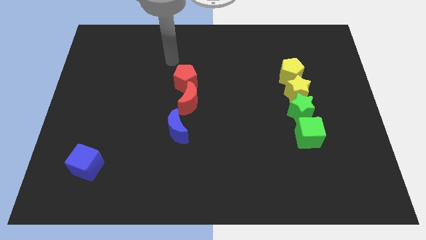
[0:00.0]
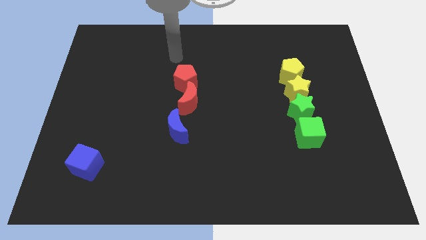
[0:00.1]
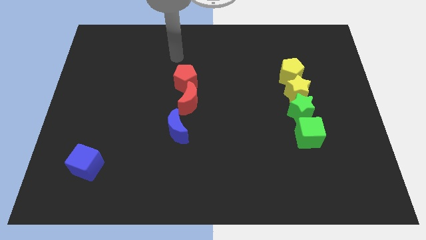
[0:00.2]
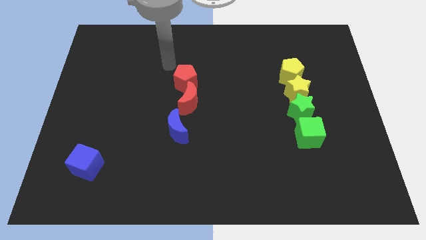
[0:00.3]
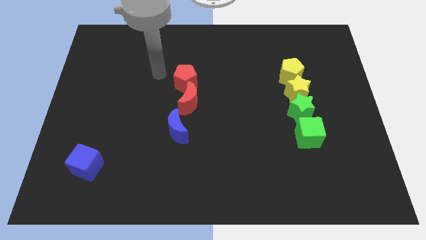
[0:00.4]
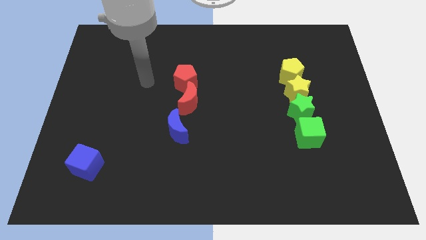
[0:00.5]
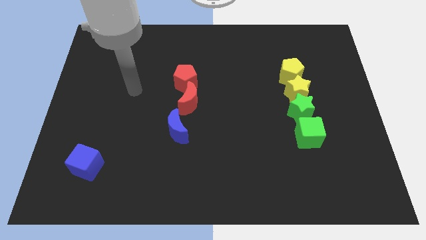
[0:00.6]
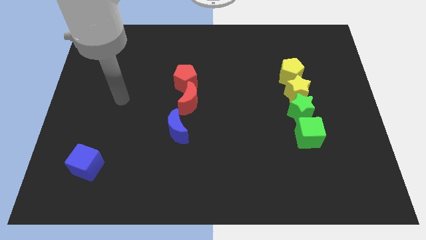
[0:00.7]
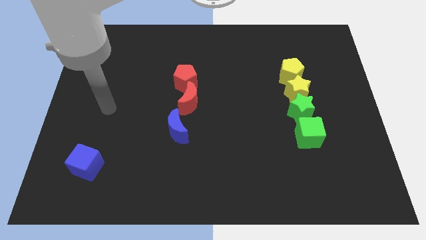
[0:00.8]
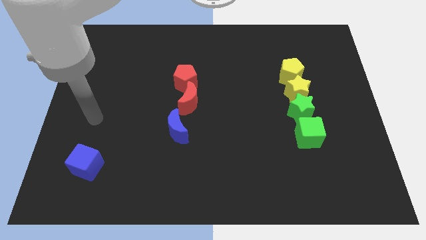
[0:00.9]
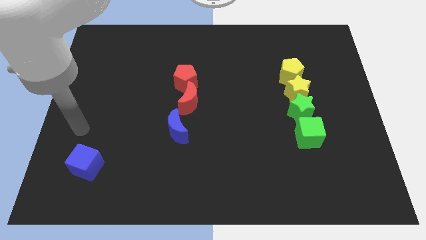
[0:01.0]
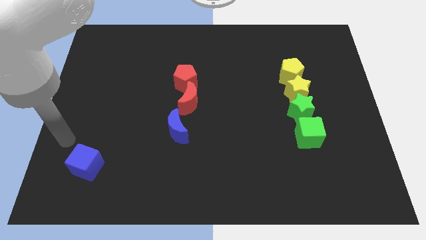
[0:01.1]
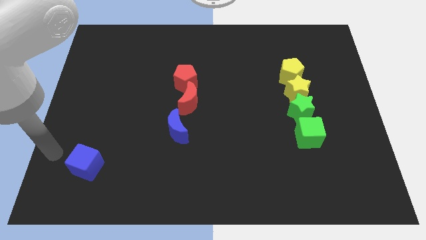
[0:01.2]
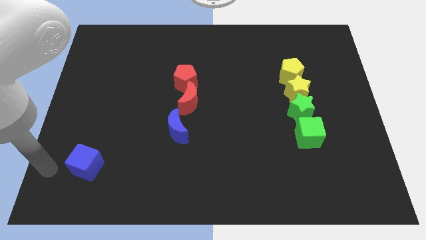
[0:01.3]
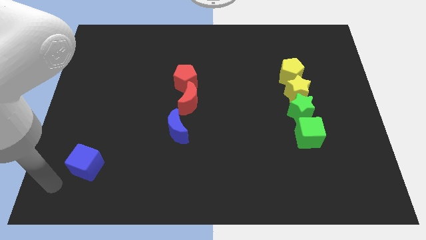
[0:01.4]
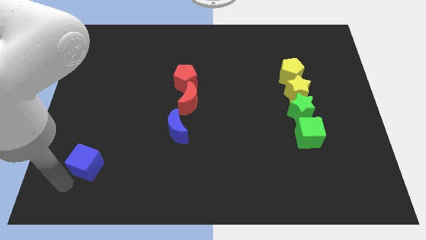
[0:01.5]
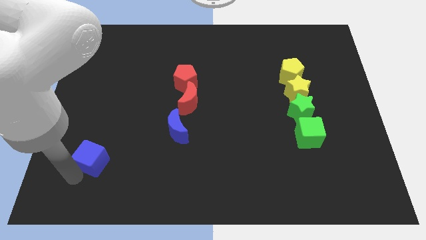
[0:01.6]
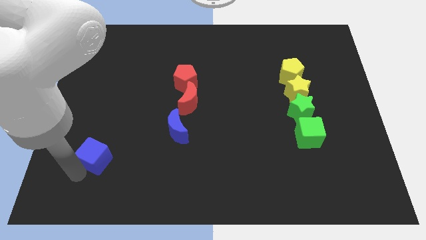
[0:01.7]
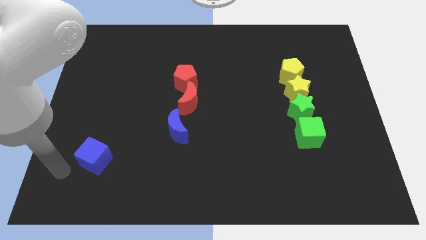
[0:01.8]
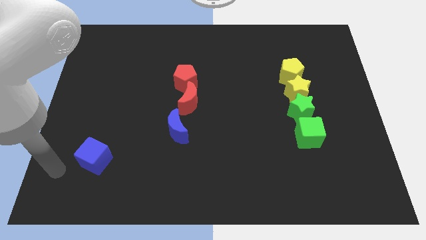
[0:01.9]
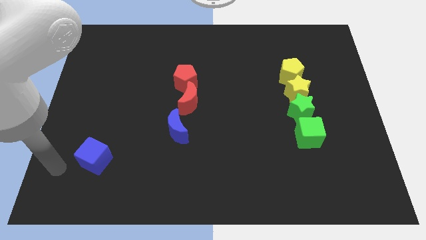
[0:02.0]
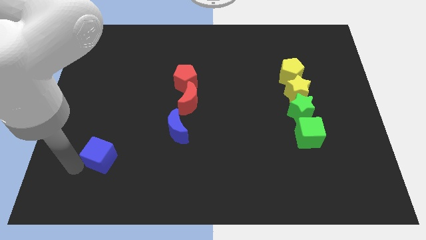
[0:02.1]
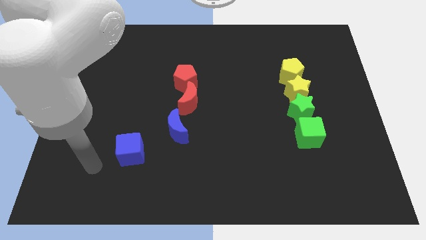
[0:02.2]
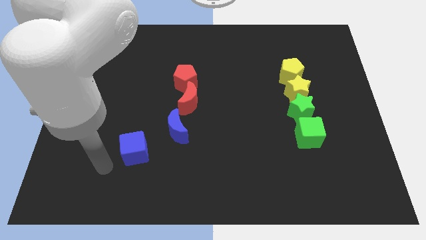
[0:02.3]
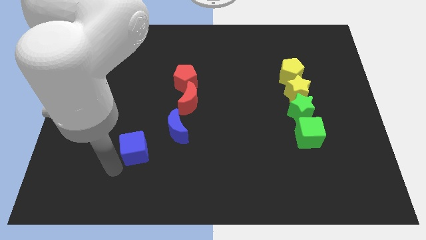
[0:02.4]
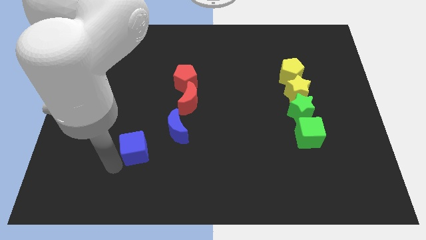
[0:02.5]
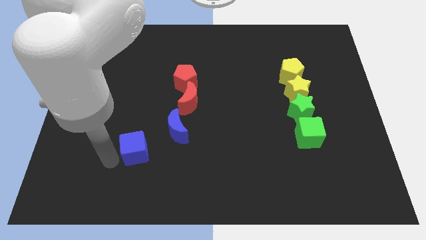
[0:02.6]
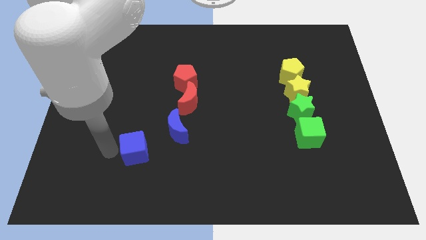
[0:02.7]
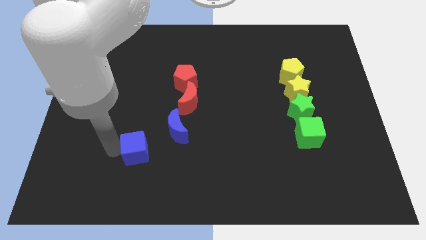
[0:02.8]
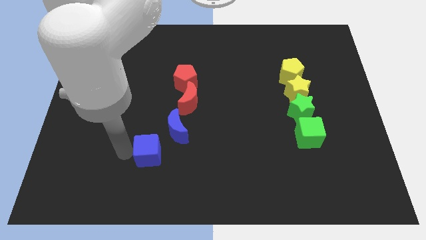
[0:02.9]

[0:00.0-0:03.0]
move the blue cube towards the bottom left of the blue crescent

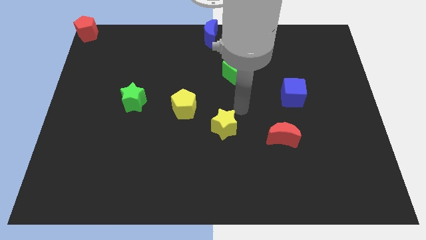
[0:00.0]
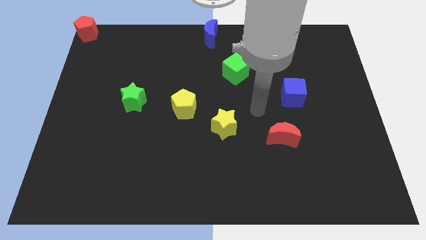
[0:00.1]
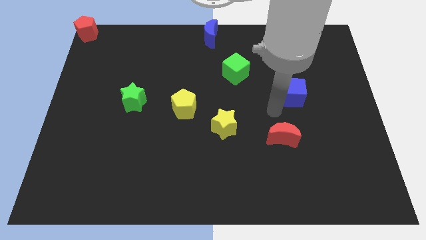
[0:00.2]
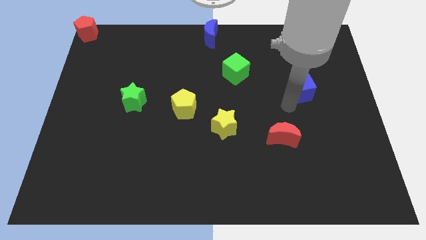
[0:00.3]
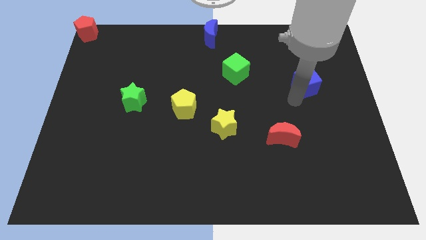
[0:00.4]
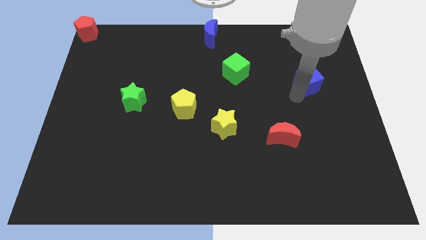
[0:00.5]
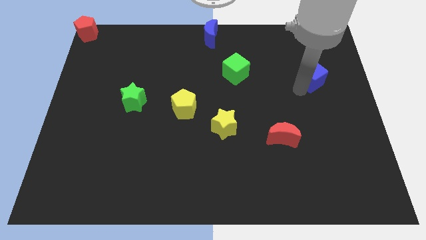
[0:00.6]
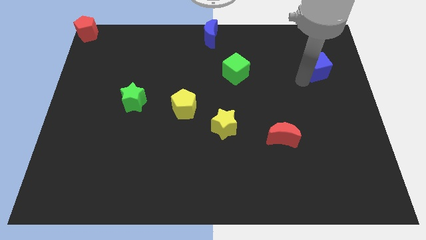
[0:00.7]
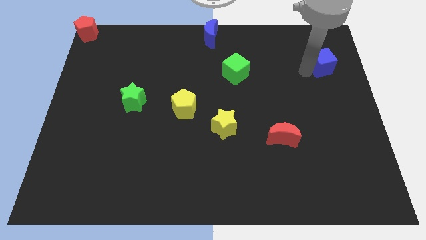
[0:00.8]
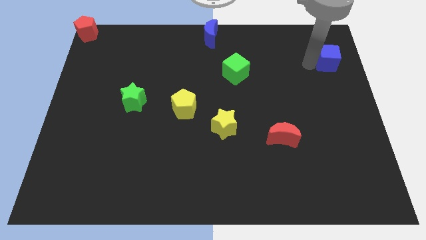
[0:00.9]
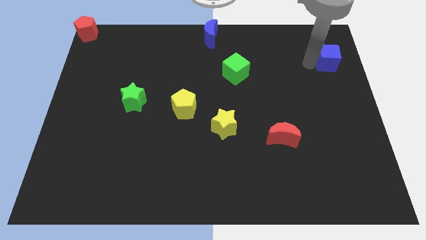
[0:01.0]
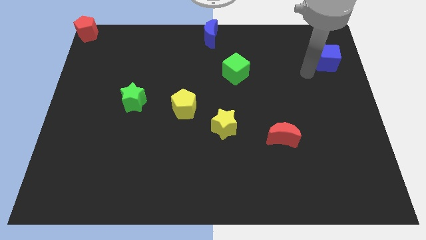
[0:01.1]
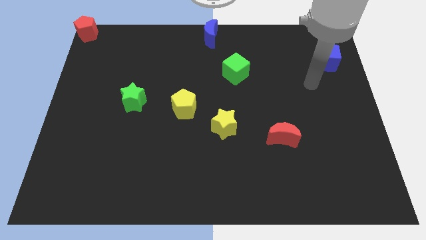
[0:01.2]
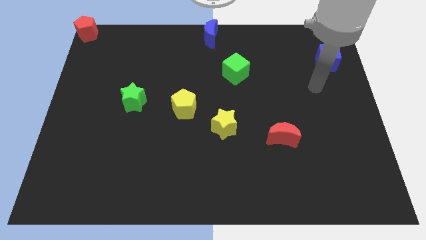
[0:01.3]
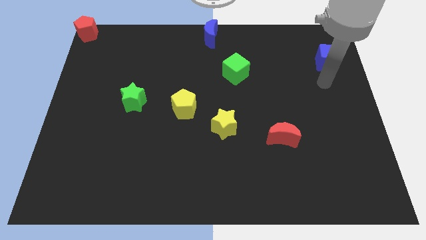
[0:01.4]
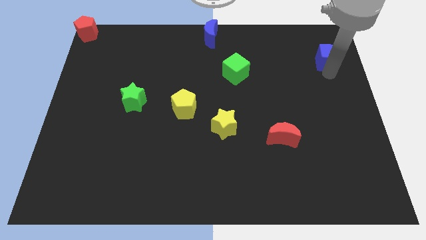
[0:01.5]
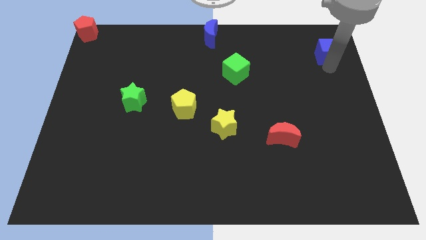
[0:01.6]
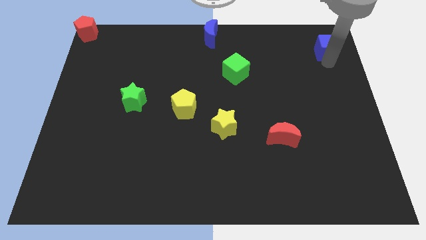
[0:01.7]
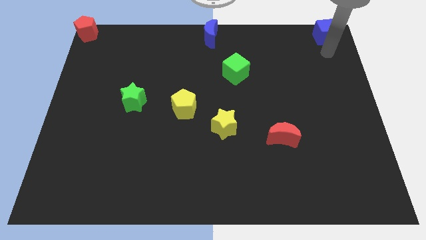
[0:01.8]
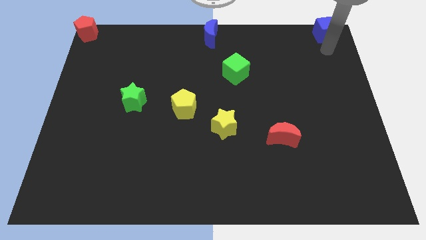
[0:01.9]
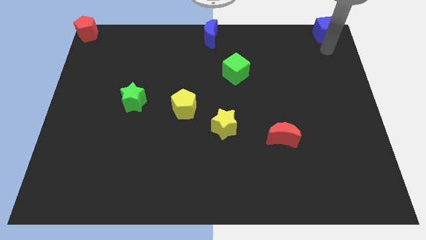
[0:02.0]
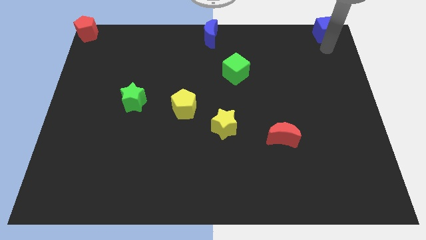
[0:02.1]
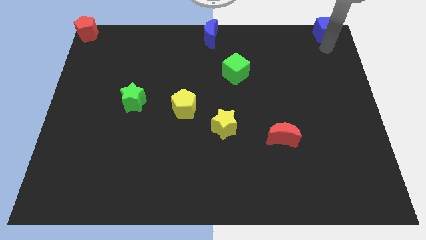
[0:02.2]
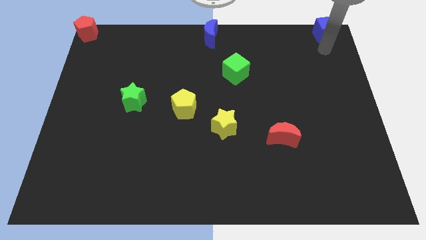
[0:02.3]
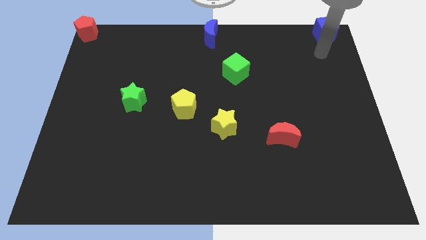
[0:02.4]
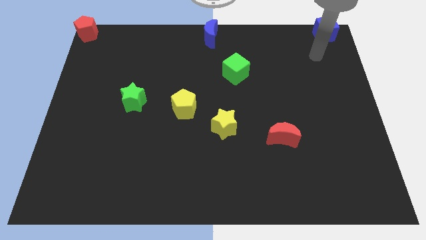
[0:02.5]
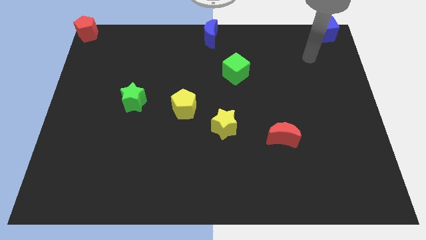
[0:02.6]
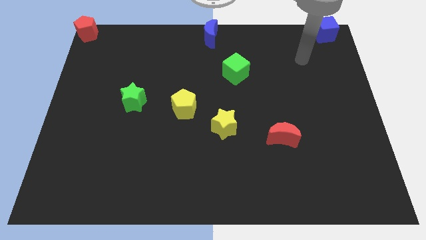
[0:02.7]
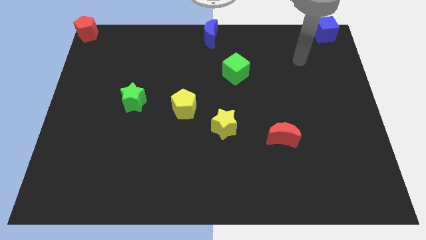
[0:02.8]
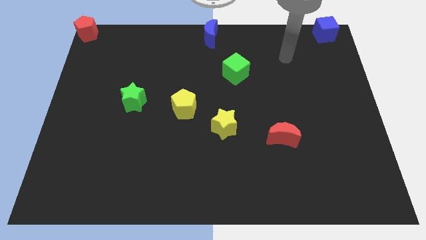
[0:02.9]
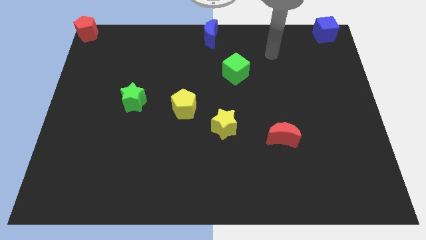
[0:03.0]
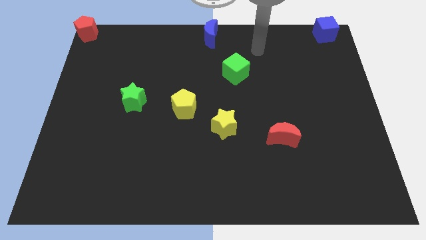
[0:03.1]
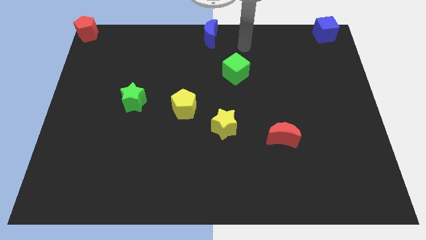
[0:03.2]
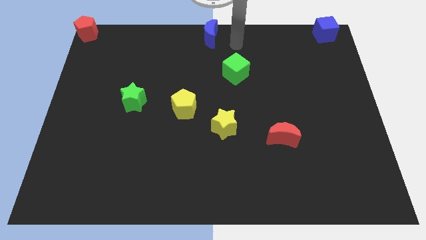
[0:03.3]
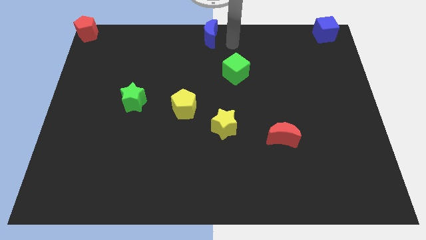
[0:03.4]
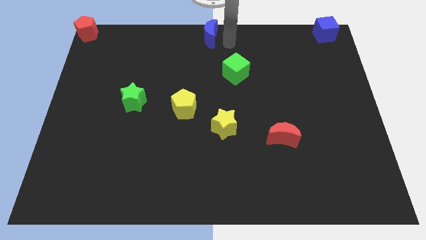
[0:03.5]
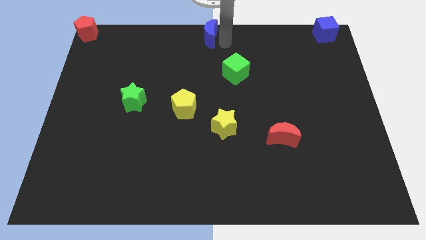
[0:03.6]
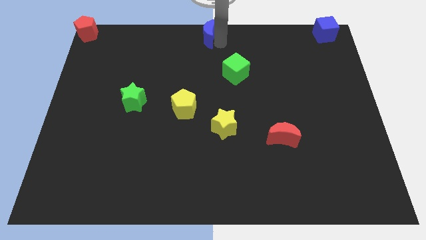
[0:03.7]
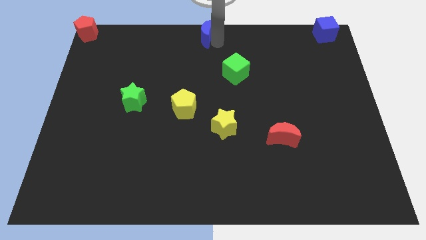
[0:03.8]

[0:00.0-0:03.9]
place the blue cube horizontally to the right side of the blue crescent

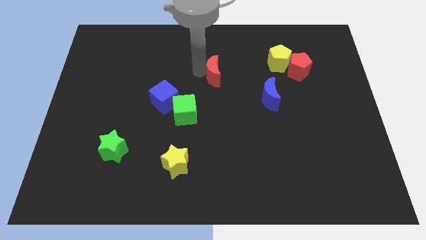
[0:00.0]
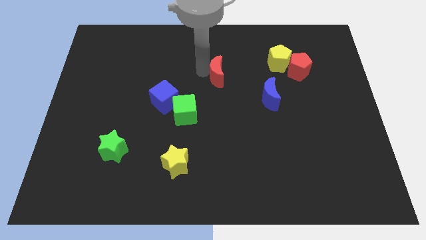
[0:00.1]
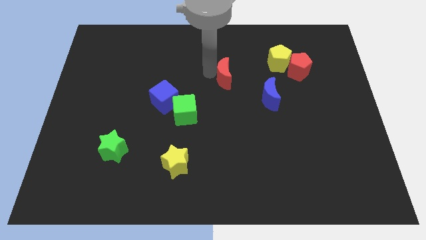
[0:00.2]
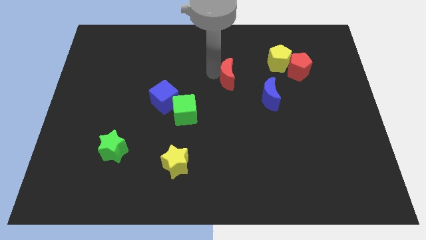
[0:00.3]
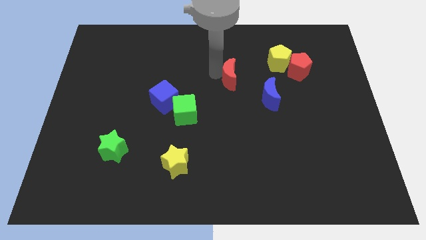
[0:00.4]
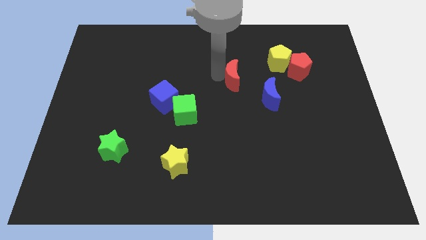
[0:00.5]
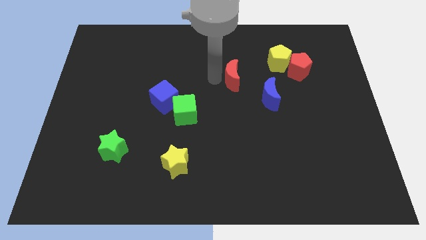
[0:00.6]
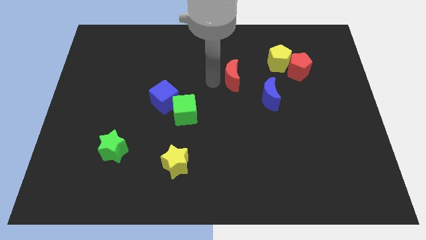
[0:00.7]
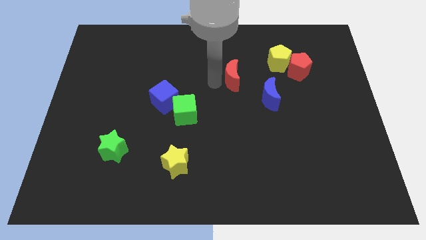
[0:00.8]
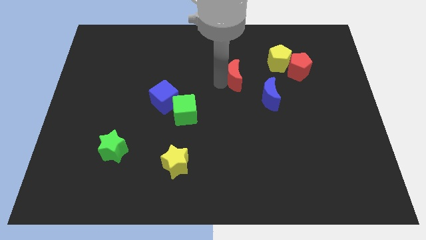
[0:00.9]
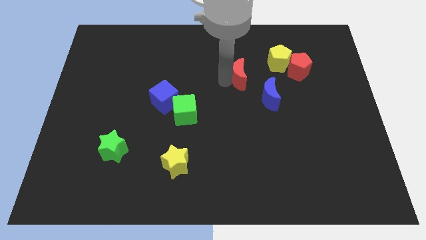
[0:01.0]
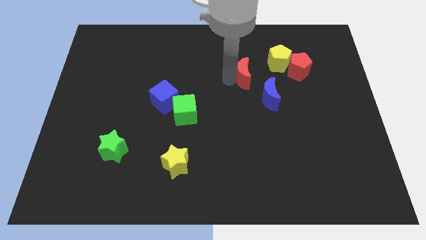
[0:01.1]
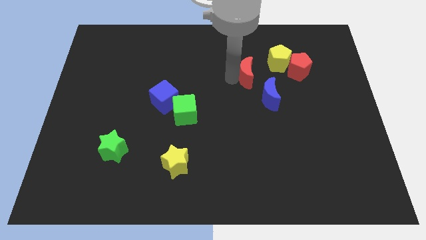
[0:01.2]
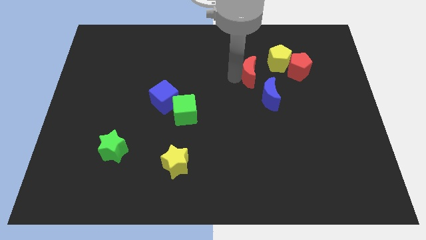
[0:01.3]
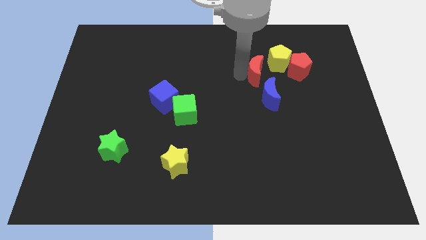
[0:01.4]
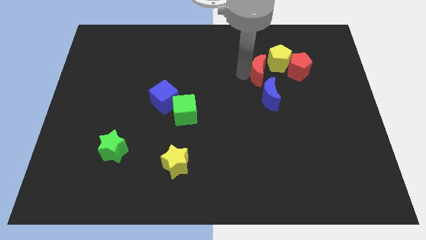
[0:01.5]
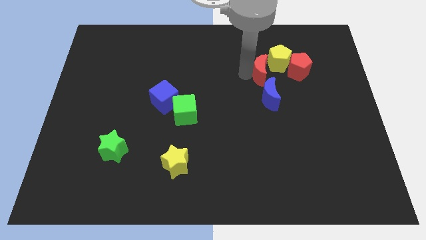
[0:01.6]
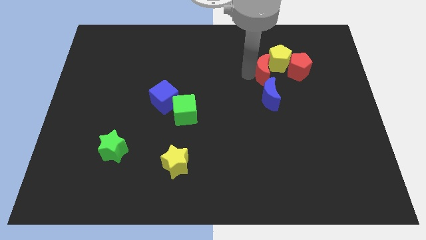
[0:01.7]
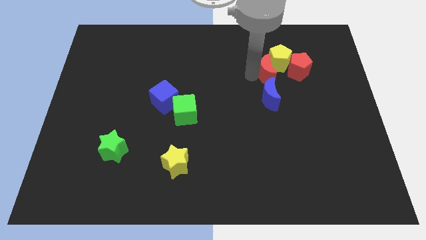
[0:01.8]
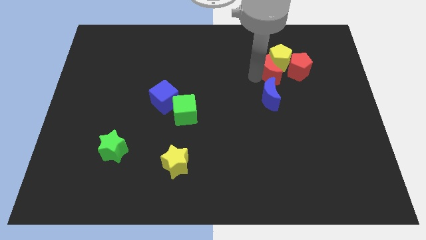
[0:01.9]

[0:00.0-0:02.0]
push the red crescent into the yellow pentagon

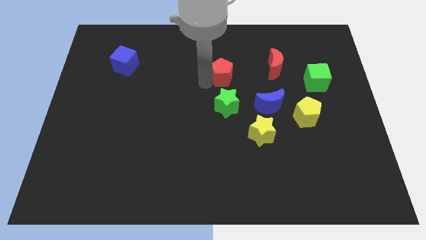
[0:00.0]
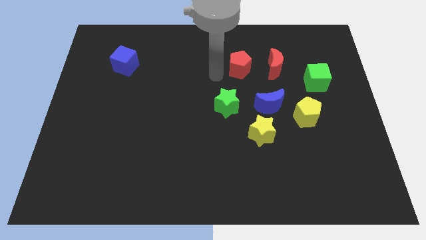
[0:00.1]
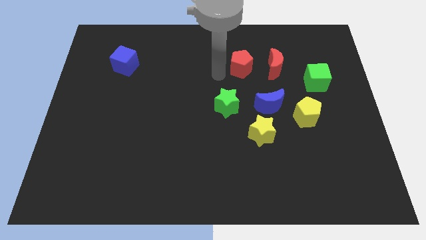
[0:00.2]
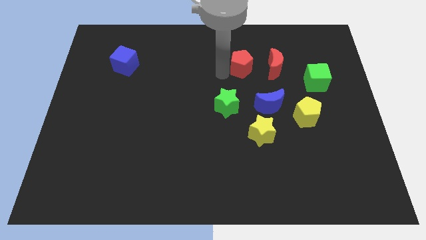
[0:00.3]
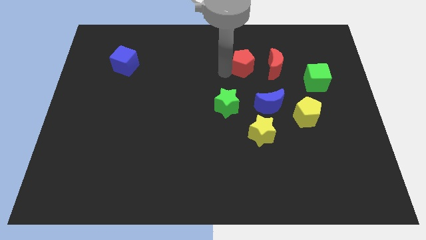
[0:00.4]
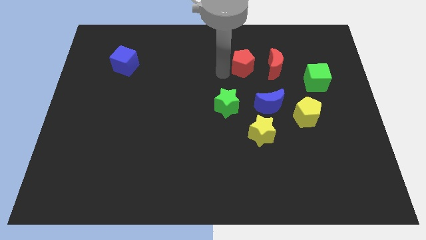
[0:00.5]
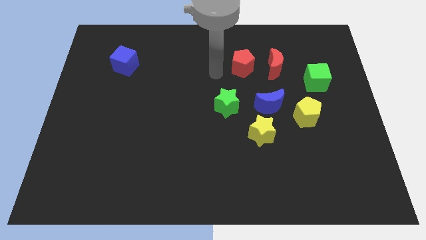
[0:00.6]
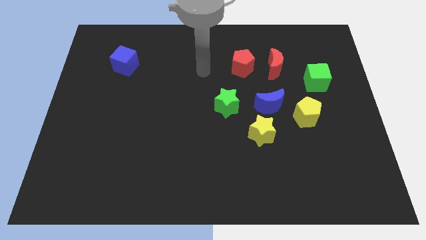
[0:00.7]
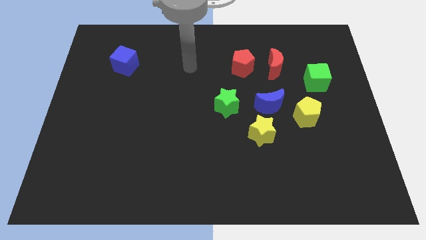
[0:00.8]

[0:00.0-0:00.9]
push the red pentagon to the left of the red crescent
